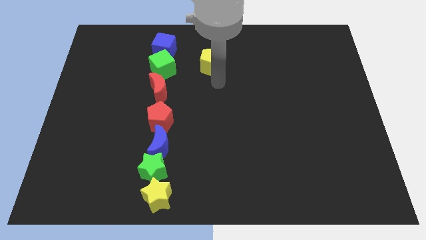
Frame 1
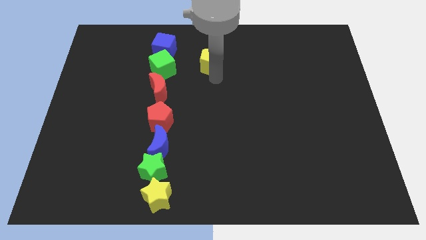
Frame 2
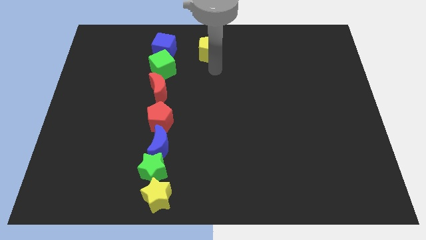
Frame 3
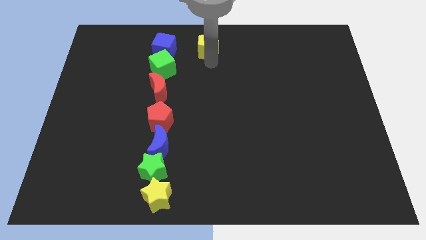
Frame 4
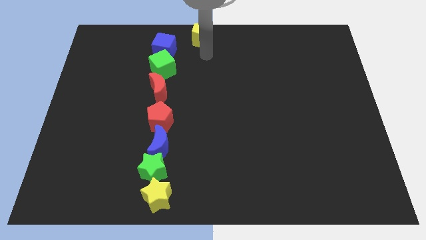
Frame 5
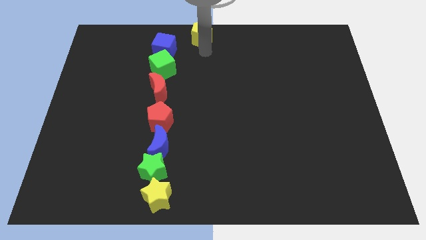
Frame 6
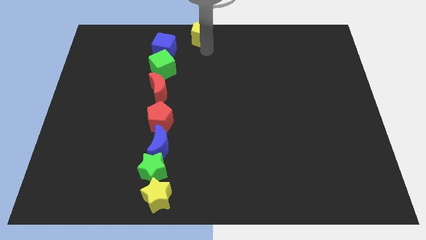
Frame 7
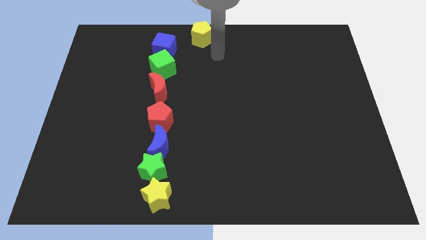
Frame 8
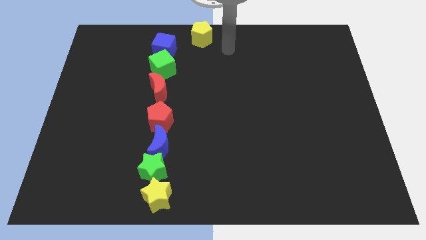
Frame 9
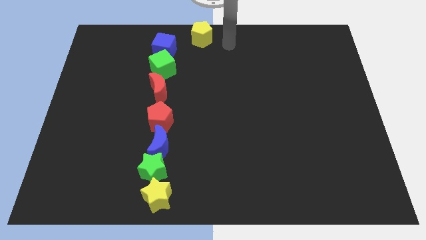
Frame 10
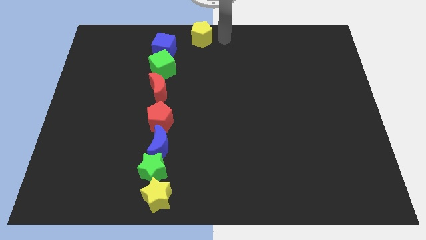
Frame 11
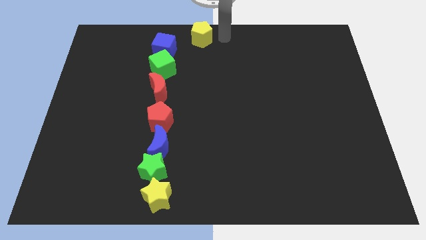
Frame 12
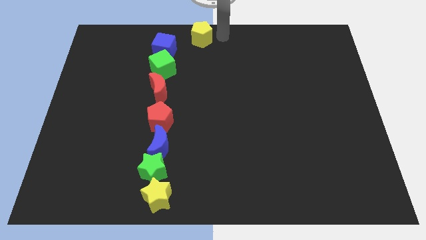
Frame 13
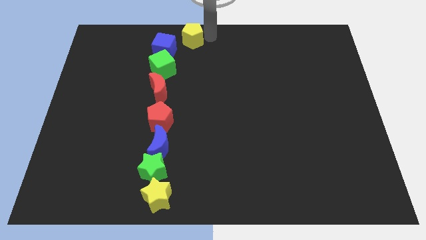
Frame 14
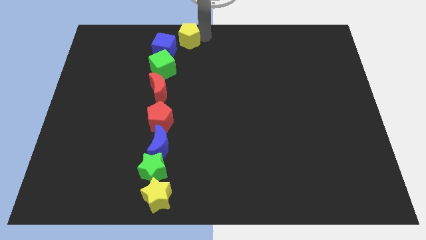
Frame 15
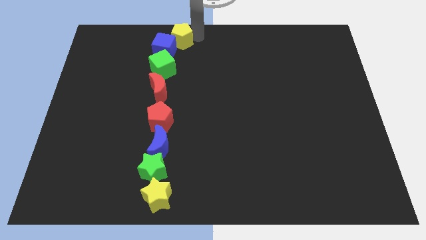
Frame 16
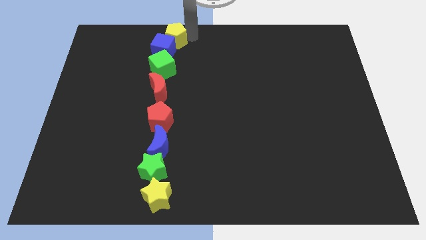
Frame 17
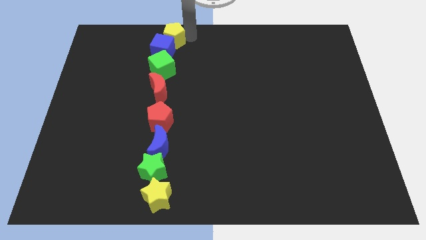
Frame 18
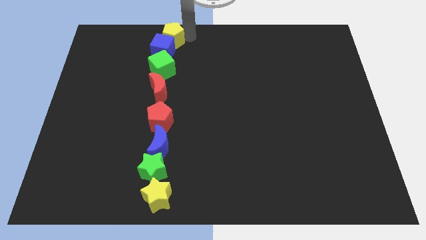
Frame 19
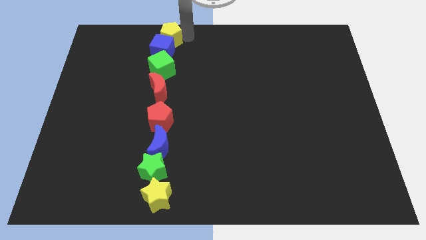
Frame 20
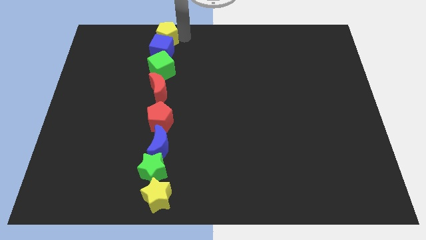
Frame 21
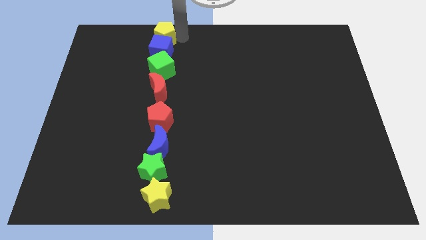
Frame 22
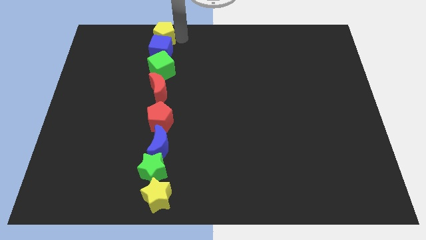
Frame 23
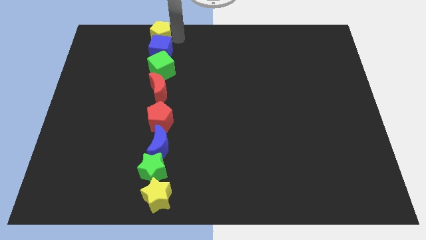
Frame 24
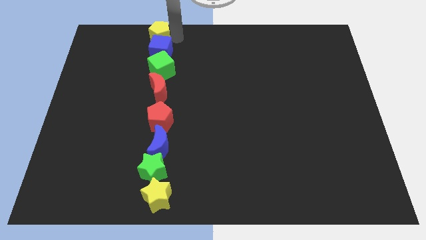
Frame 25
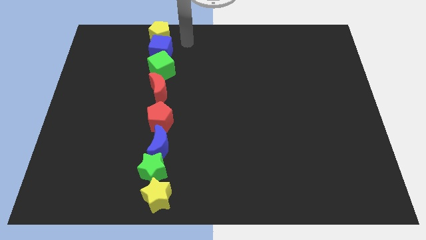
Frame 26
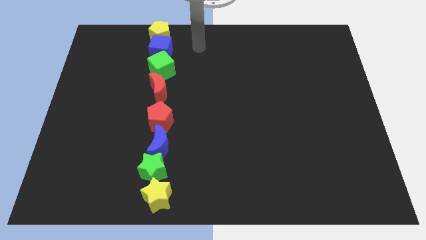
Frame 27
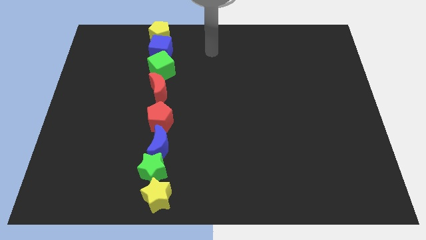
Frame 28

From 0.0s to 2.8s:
place the yellow pentagon above the blue cube

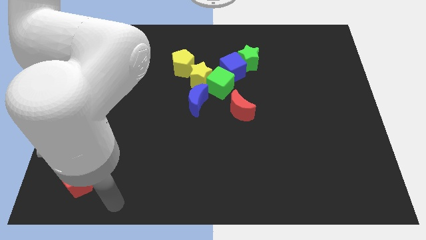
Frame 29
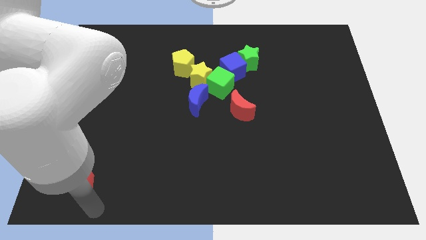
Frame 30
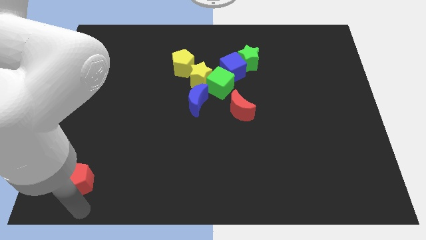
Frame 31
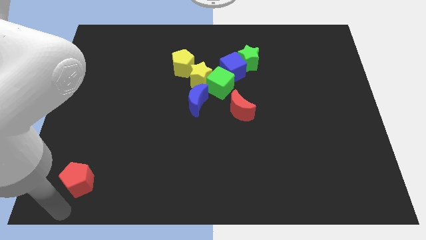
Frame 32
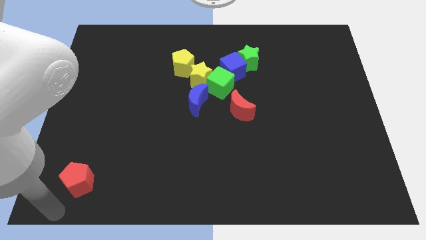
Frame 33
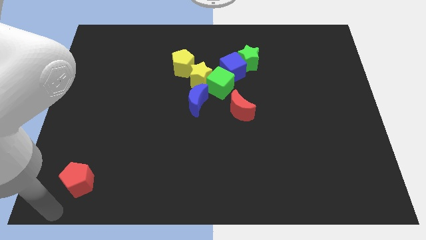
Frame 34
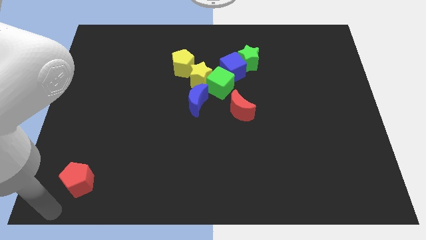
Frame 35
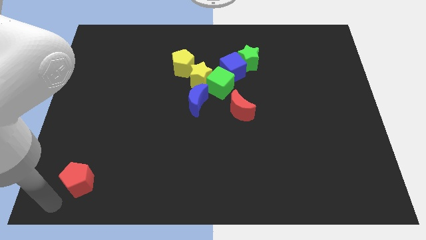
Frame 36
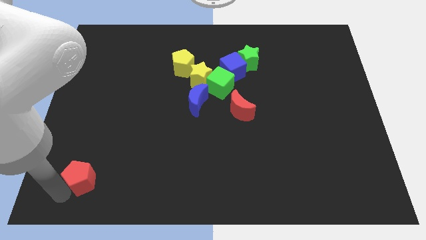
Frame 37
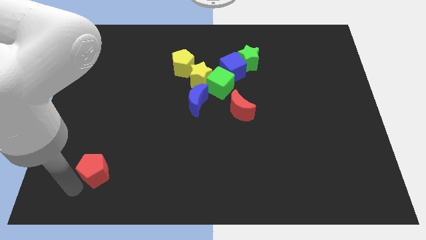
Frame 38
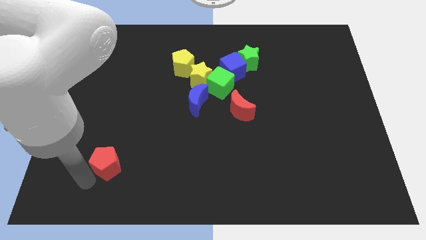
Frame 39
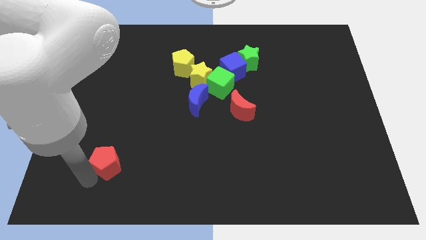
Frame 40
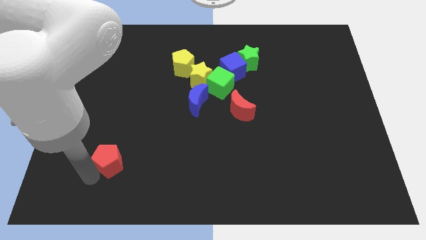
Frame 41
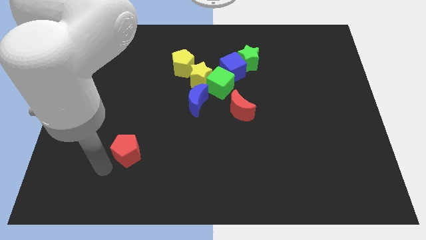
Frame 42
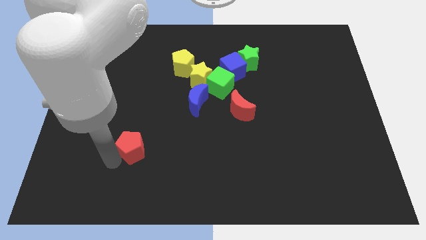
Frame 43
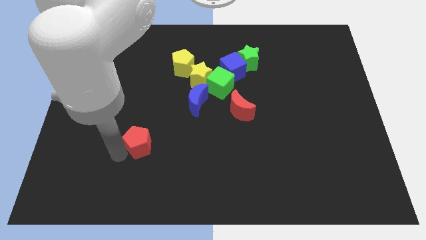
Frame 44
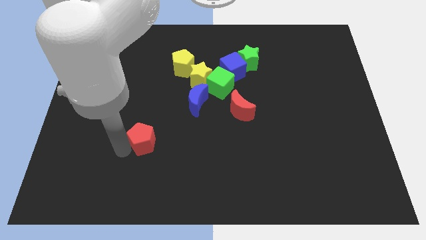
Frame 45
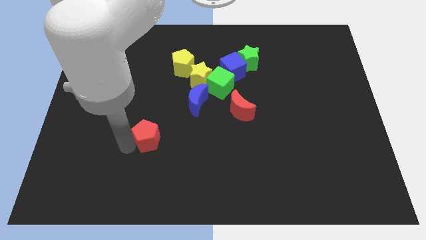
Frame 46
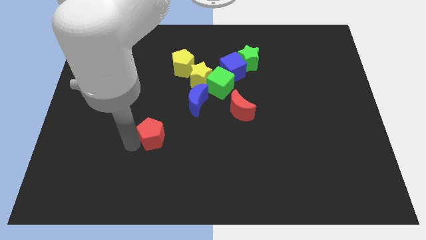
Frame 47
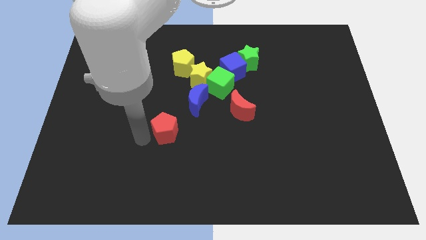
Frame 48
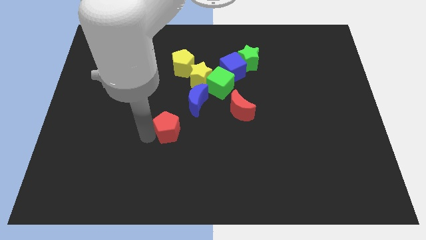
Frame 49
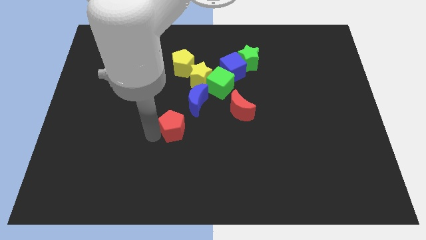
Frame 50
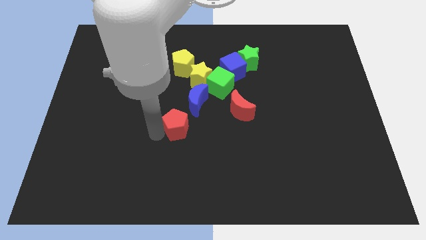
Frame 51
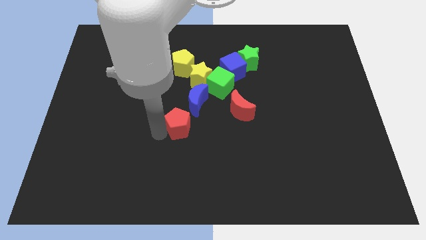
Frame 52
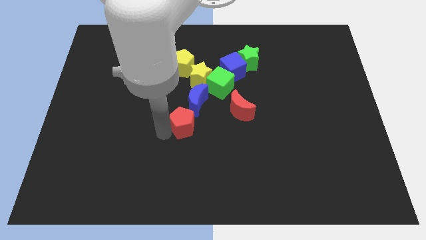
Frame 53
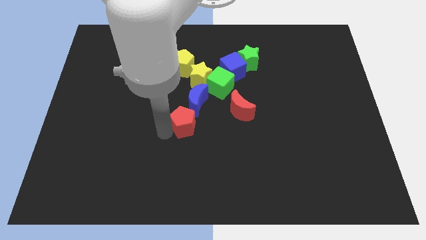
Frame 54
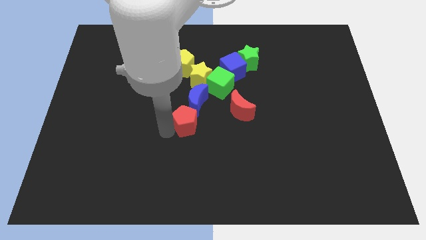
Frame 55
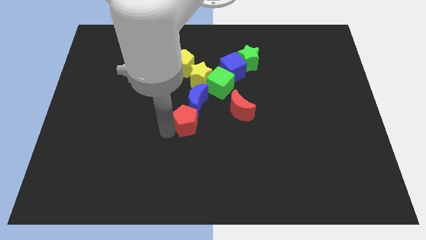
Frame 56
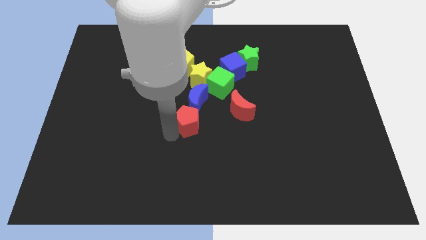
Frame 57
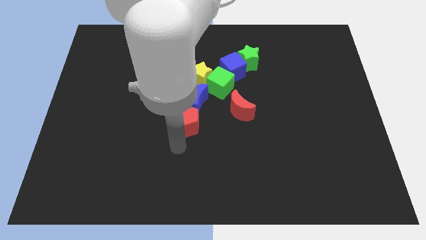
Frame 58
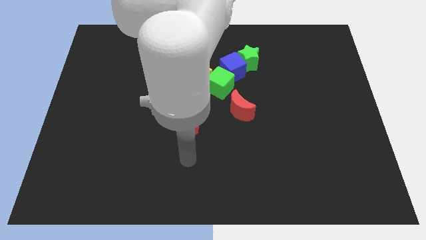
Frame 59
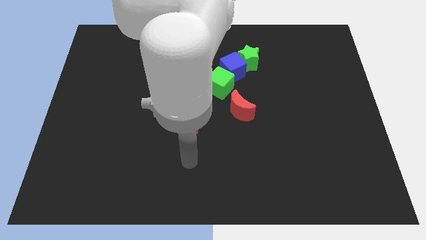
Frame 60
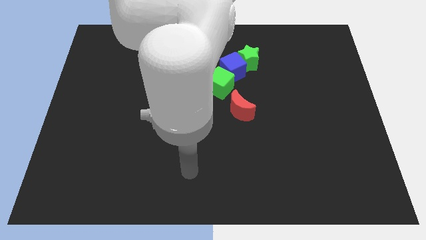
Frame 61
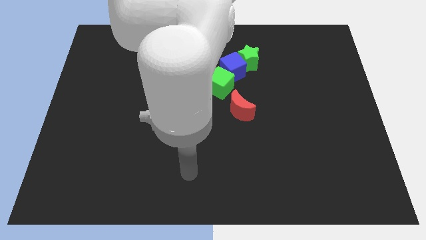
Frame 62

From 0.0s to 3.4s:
move the red pentagon to the bottom of the blue crescent

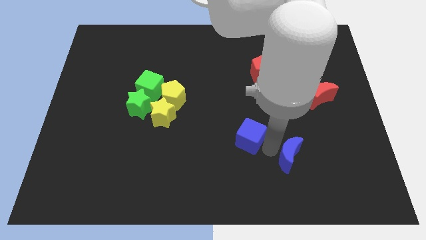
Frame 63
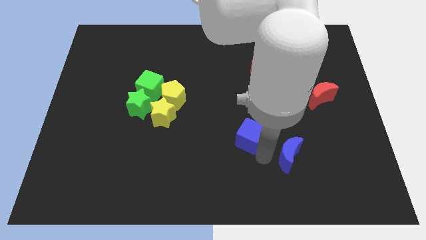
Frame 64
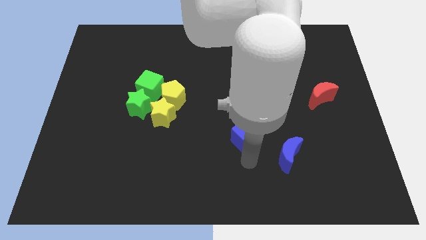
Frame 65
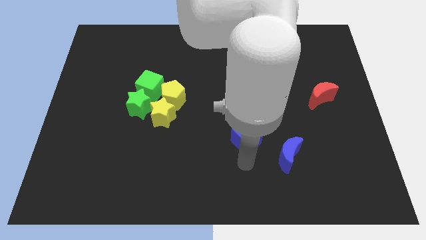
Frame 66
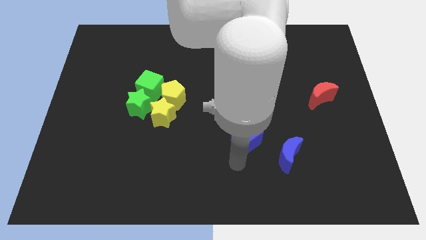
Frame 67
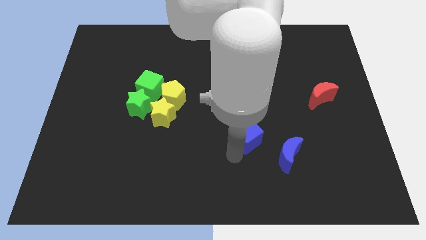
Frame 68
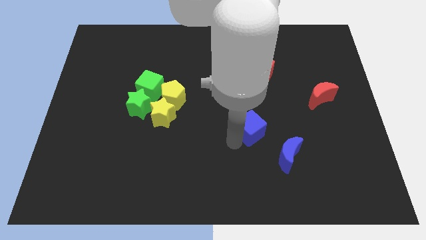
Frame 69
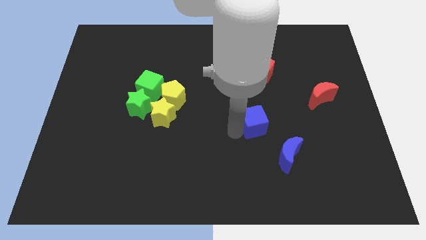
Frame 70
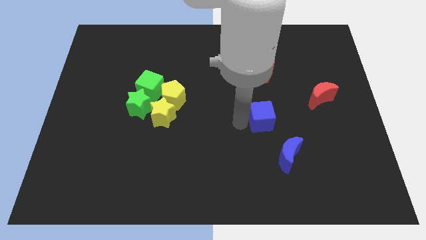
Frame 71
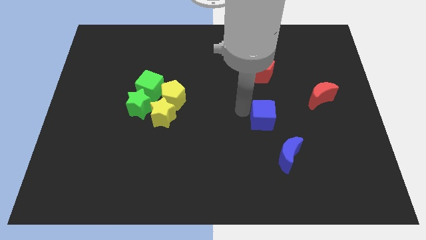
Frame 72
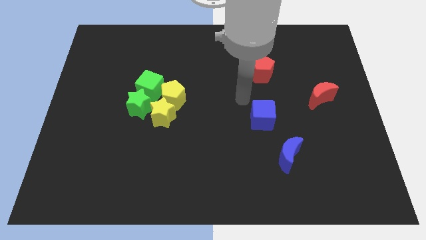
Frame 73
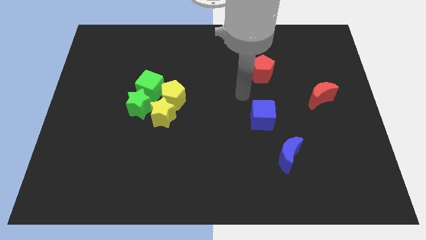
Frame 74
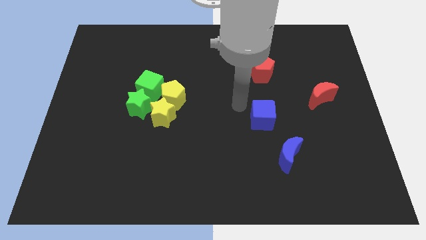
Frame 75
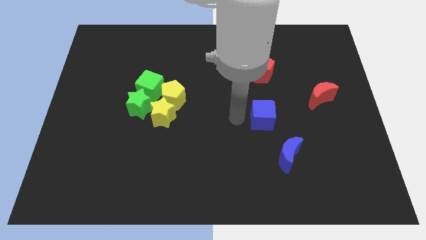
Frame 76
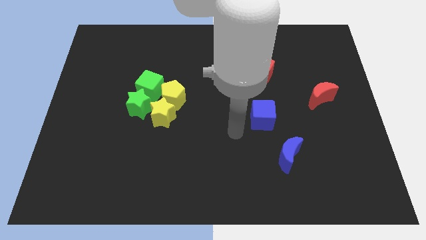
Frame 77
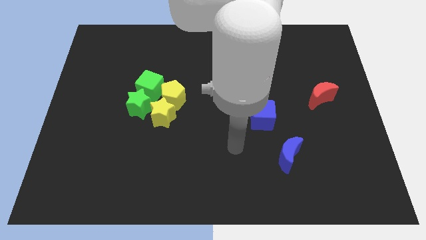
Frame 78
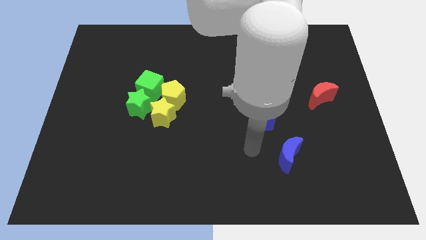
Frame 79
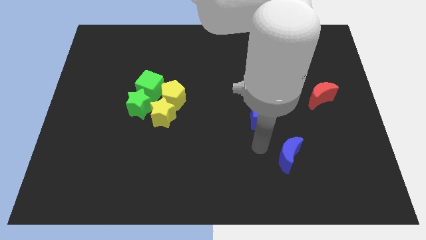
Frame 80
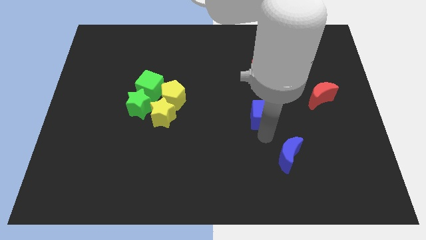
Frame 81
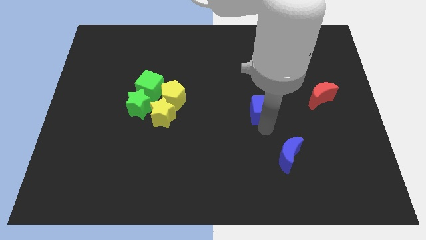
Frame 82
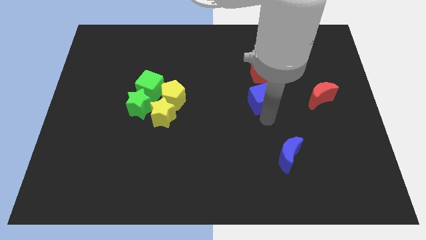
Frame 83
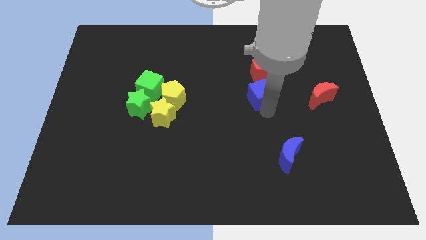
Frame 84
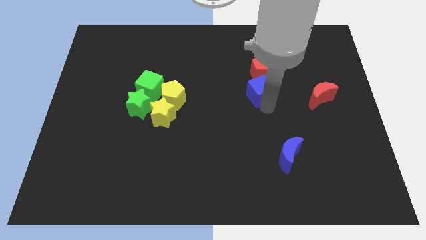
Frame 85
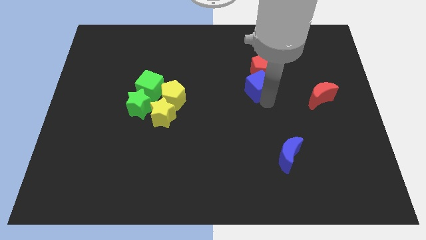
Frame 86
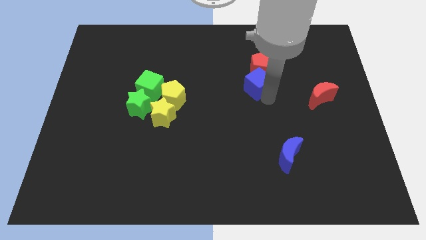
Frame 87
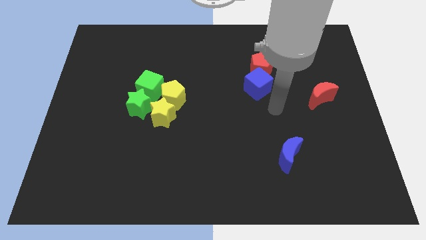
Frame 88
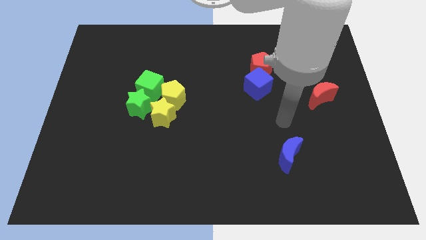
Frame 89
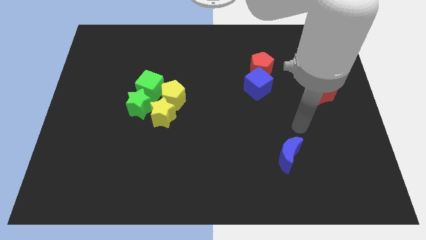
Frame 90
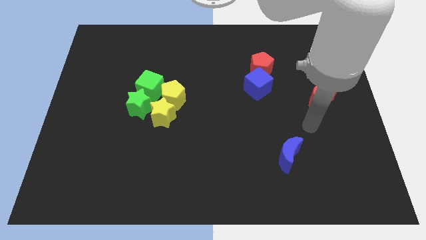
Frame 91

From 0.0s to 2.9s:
push the blue cube into the red pentagon
